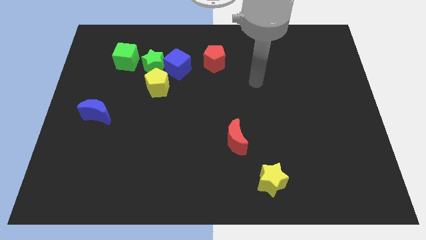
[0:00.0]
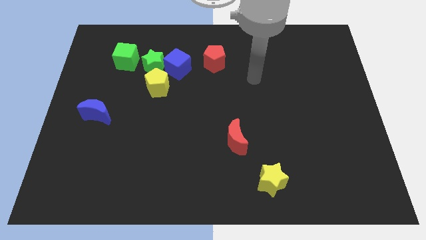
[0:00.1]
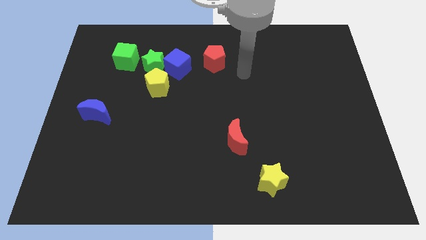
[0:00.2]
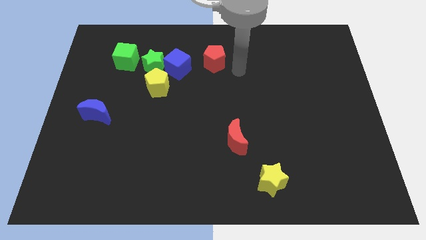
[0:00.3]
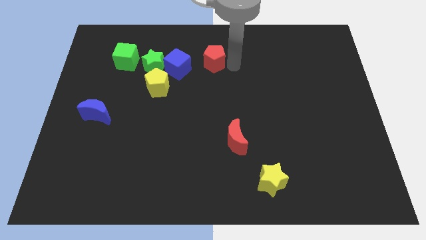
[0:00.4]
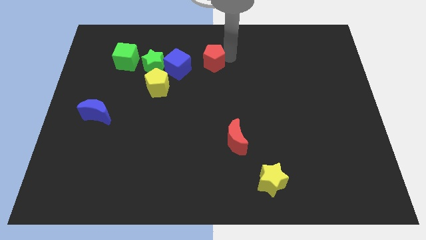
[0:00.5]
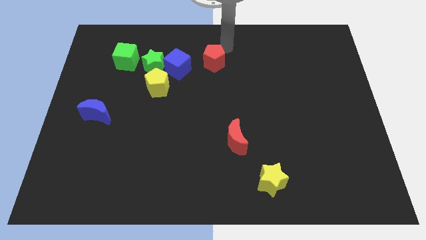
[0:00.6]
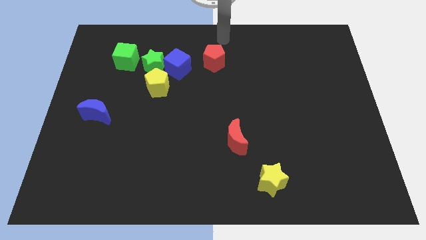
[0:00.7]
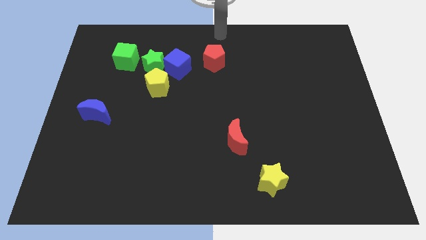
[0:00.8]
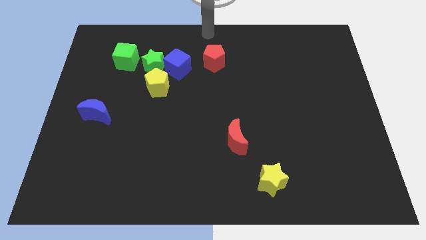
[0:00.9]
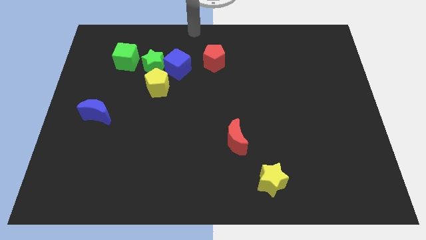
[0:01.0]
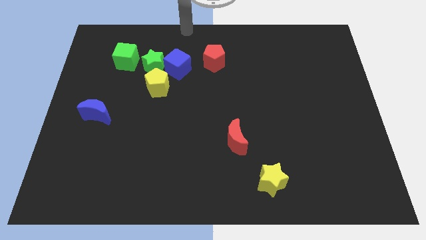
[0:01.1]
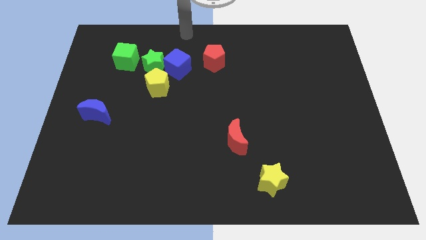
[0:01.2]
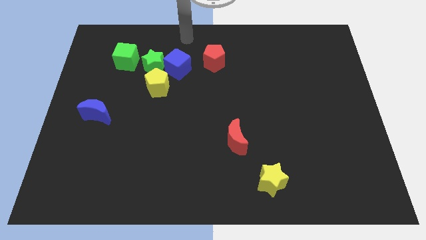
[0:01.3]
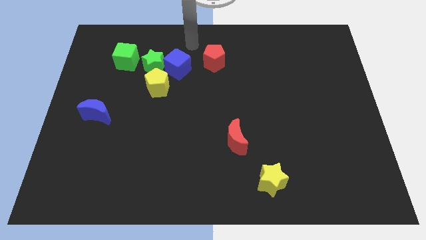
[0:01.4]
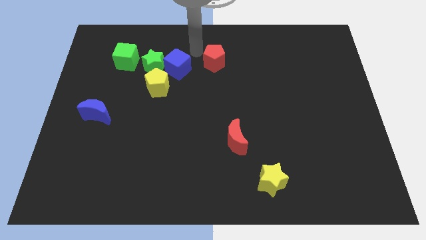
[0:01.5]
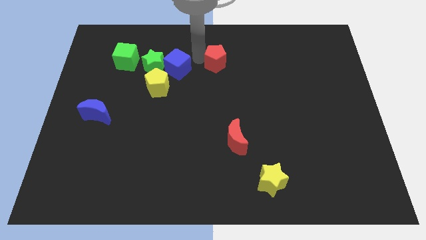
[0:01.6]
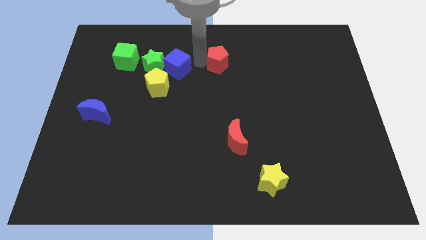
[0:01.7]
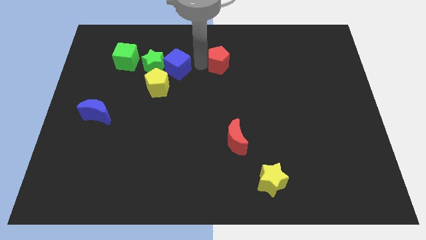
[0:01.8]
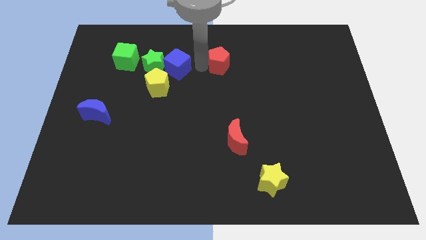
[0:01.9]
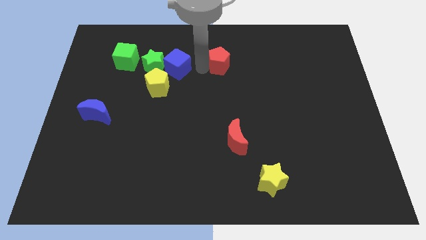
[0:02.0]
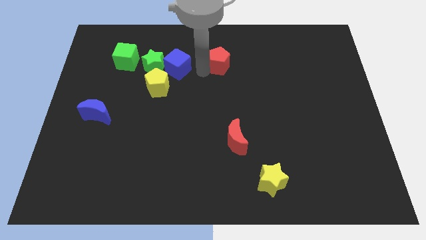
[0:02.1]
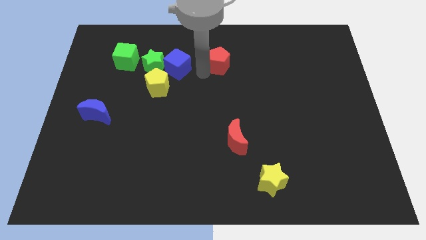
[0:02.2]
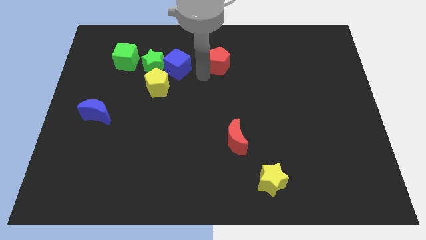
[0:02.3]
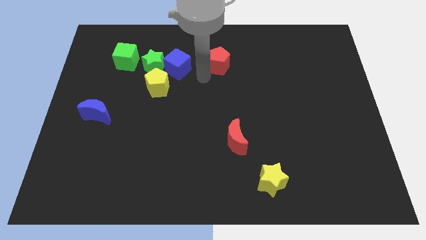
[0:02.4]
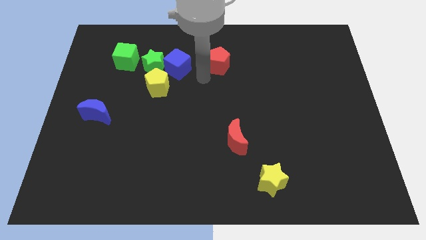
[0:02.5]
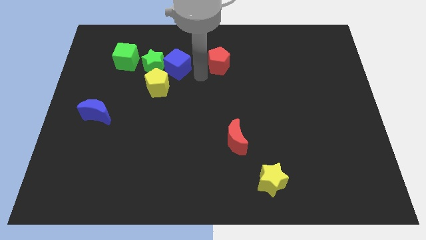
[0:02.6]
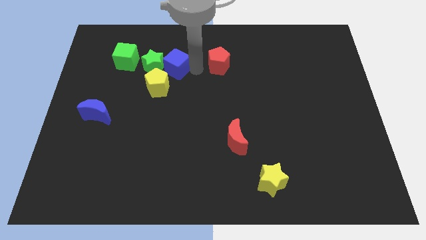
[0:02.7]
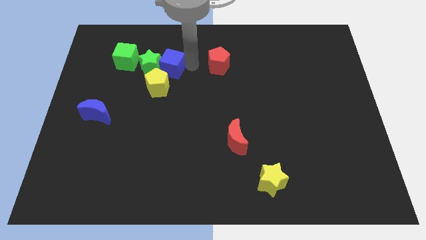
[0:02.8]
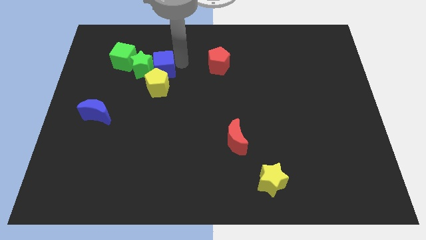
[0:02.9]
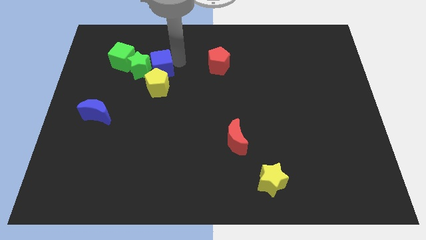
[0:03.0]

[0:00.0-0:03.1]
place your arm in between blue cube and red pentagon

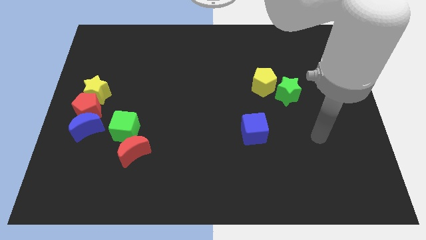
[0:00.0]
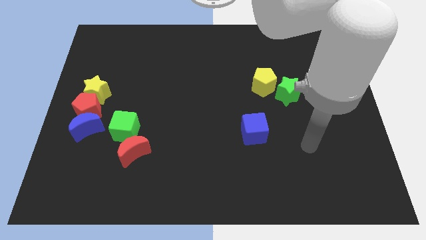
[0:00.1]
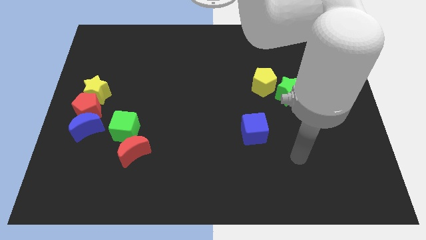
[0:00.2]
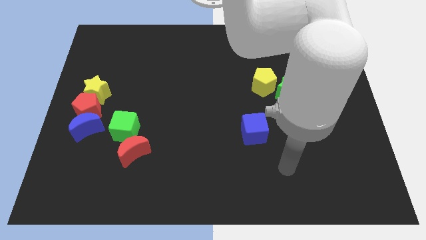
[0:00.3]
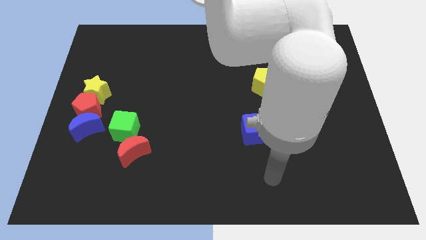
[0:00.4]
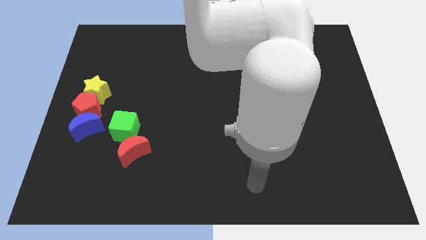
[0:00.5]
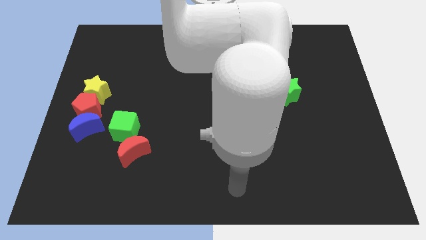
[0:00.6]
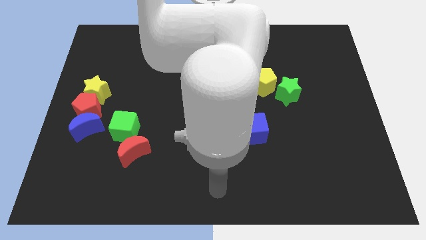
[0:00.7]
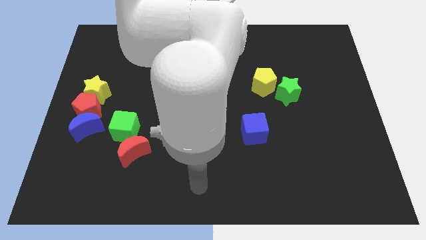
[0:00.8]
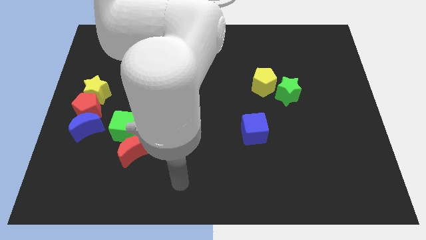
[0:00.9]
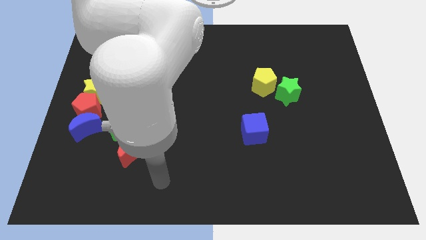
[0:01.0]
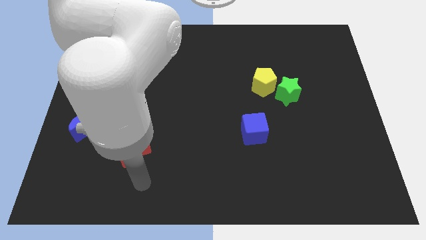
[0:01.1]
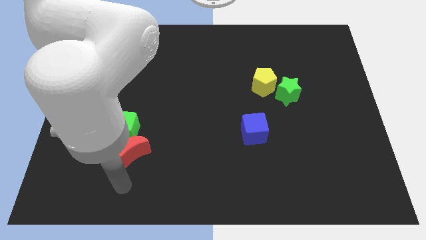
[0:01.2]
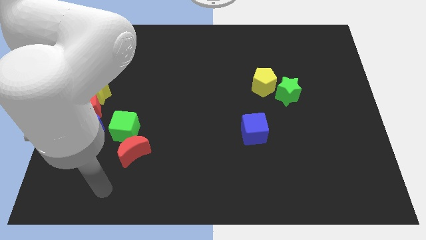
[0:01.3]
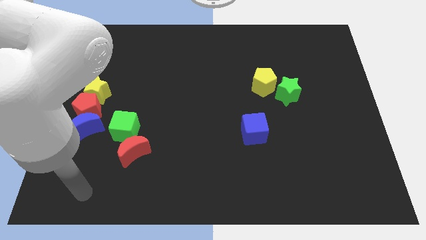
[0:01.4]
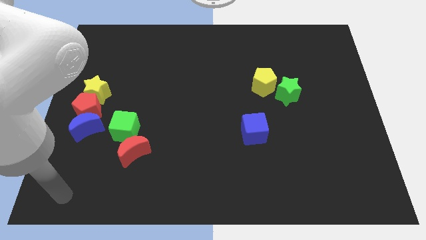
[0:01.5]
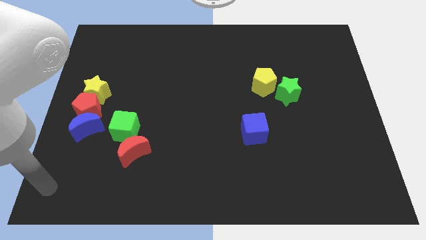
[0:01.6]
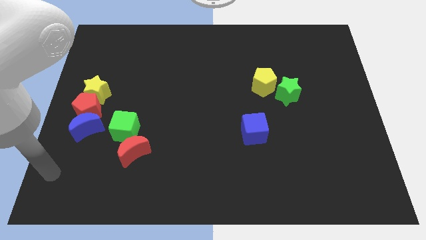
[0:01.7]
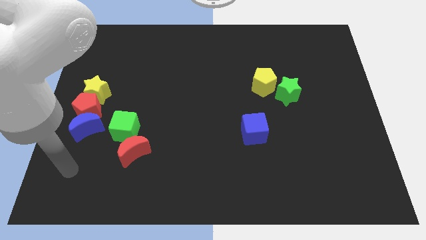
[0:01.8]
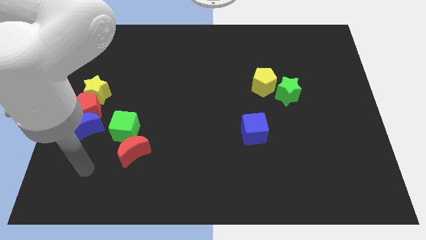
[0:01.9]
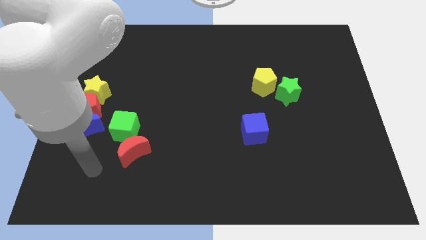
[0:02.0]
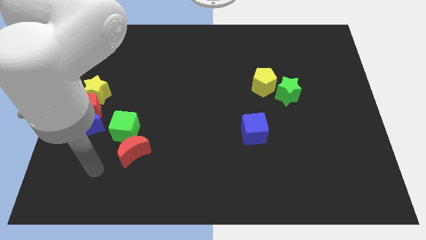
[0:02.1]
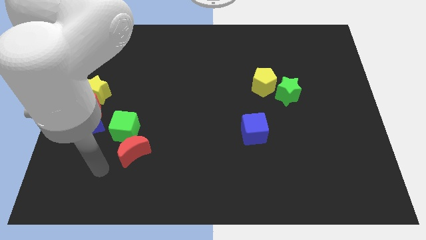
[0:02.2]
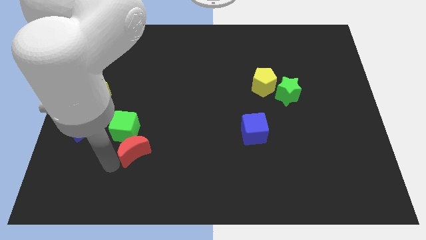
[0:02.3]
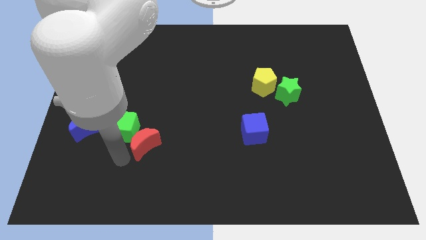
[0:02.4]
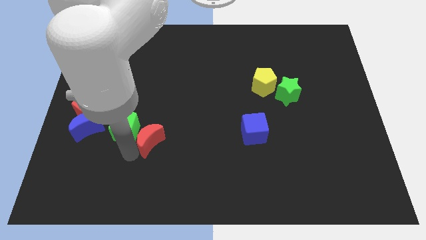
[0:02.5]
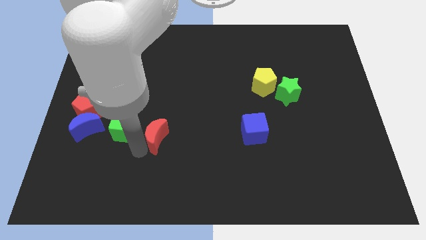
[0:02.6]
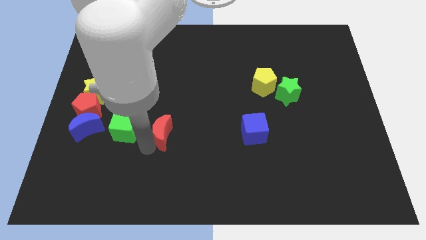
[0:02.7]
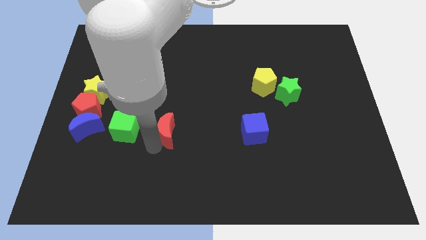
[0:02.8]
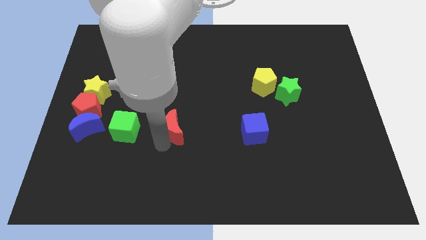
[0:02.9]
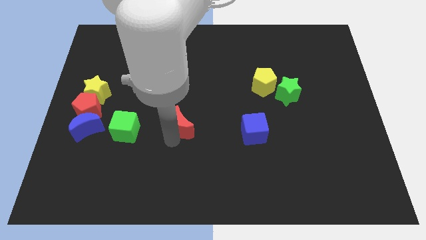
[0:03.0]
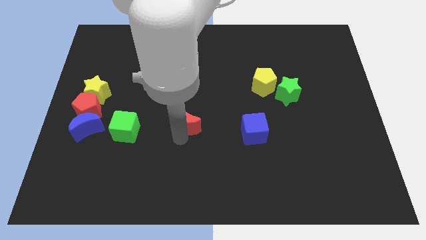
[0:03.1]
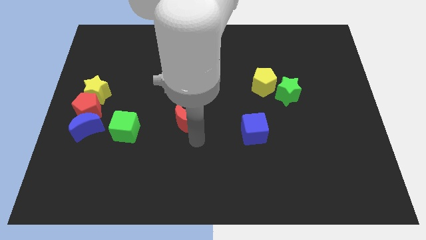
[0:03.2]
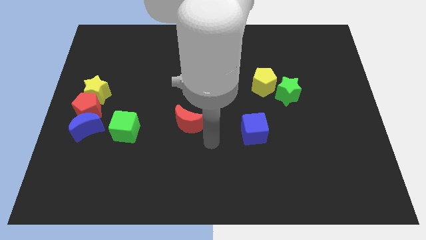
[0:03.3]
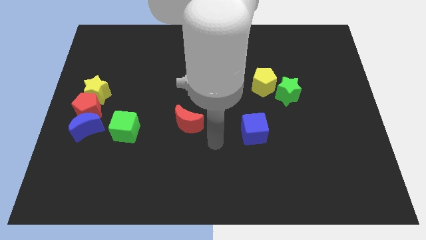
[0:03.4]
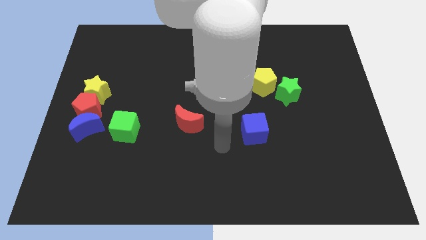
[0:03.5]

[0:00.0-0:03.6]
place the red moon beside the green cube

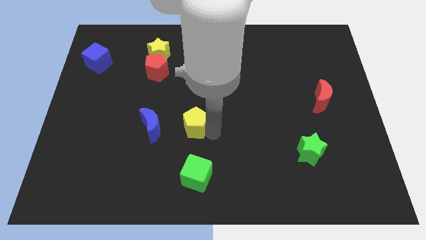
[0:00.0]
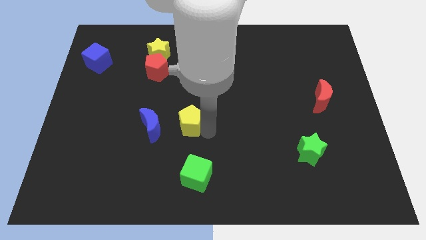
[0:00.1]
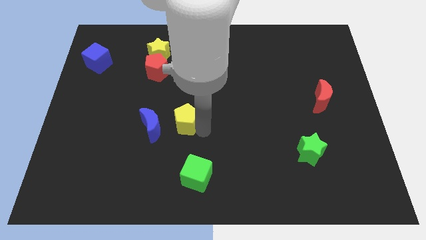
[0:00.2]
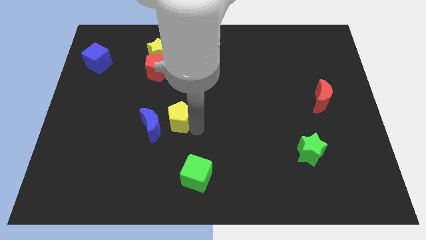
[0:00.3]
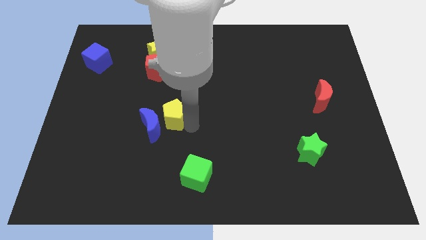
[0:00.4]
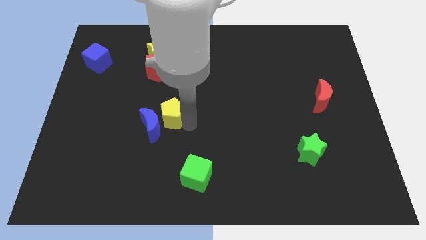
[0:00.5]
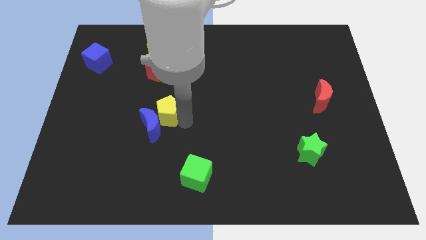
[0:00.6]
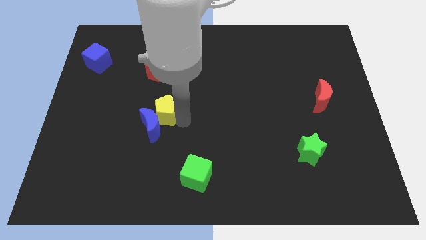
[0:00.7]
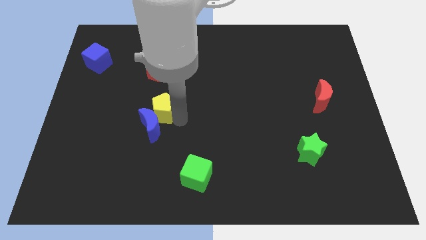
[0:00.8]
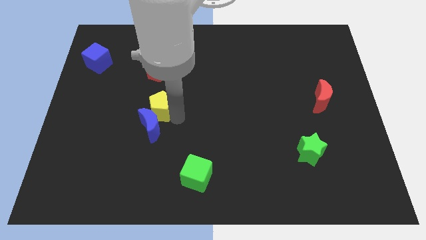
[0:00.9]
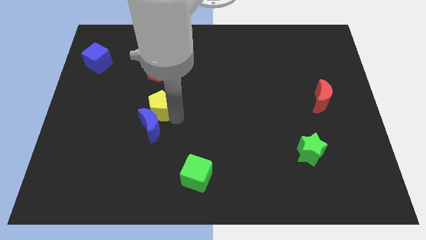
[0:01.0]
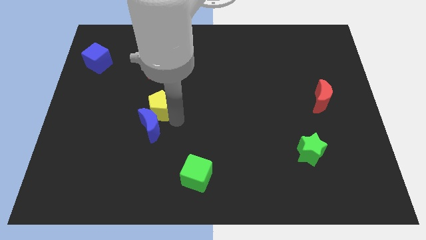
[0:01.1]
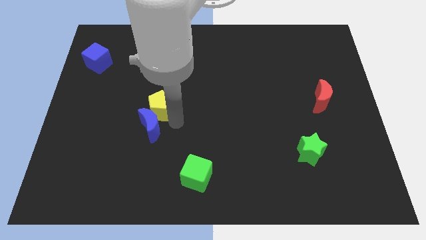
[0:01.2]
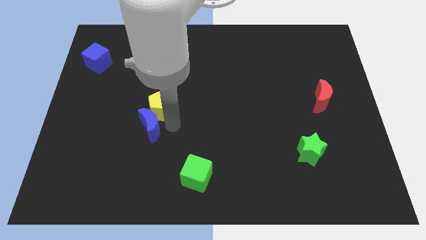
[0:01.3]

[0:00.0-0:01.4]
put yellow pentagon above blue crescent

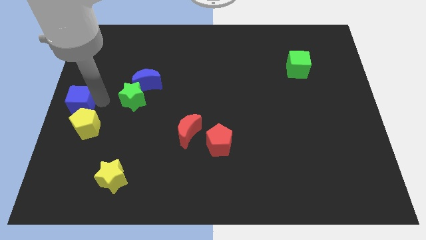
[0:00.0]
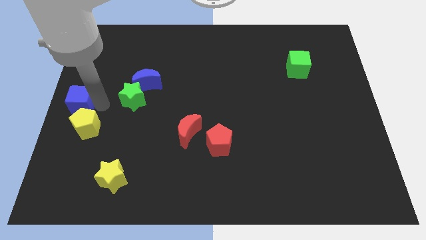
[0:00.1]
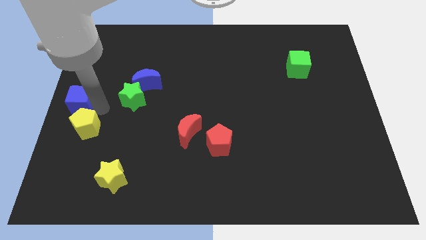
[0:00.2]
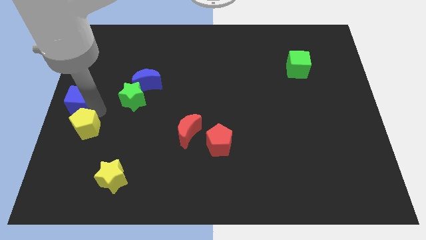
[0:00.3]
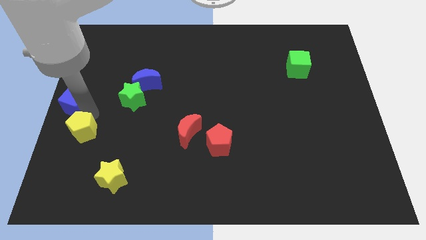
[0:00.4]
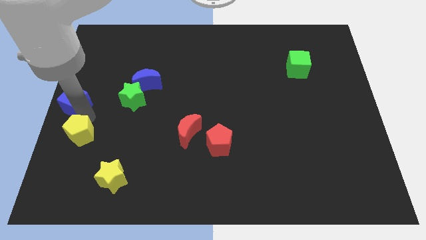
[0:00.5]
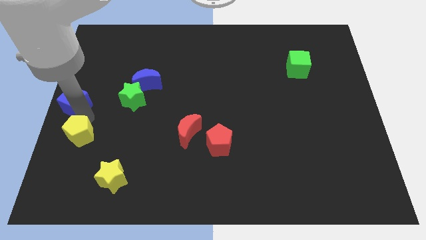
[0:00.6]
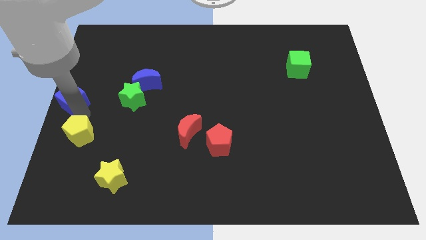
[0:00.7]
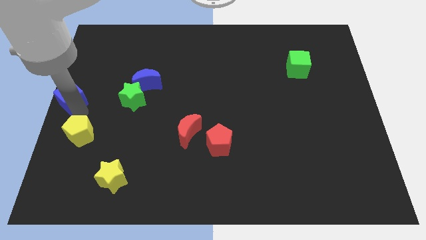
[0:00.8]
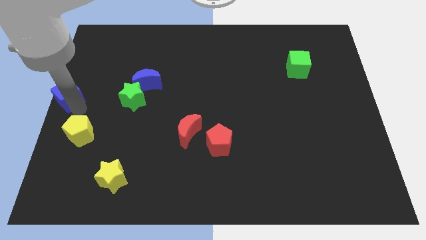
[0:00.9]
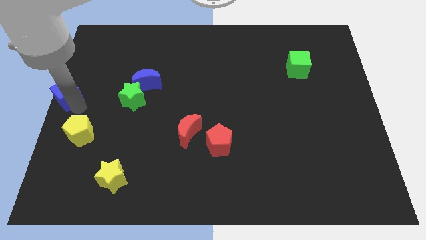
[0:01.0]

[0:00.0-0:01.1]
separate the blue cube from the yellow pentagon
